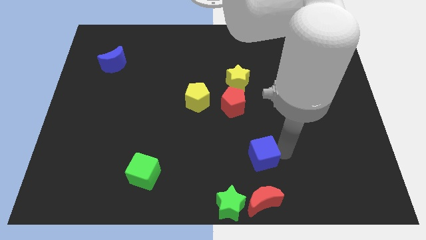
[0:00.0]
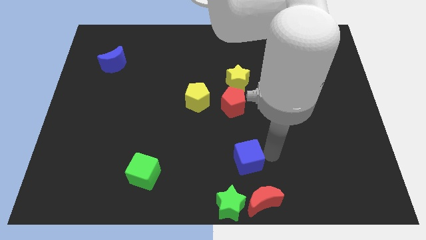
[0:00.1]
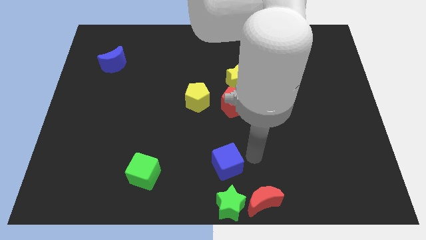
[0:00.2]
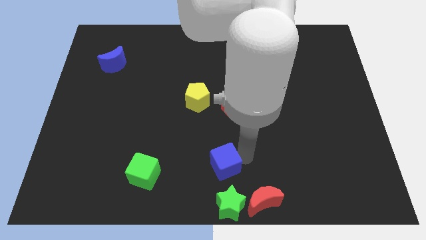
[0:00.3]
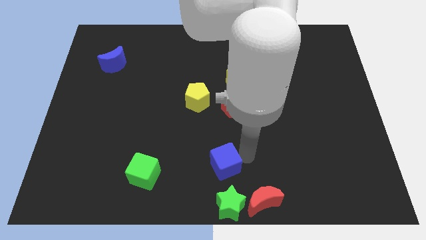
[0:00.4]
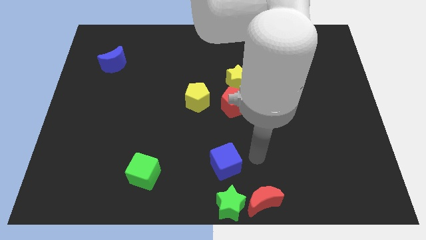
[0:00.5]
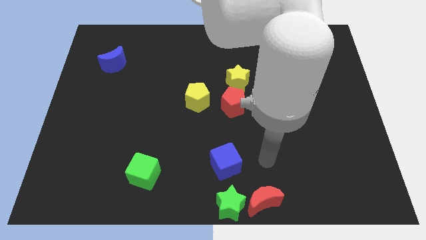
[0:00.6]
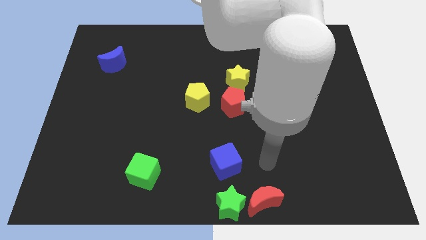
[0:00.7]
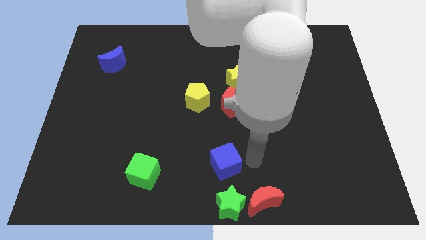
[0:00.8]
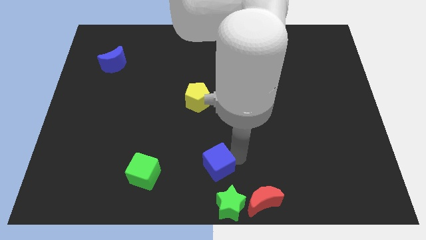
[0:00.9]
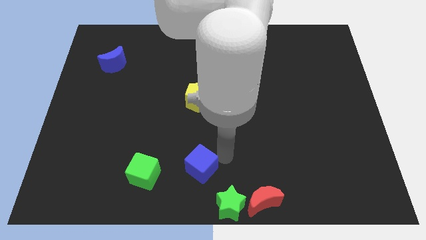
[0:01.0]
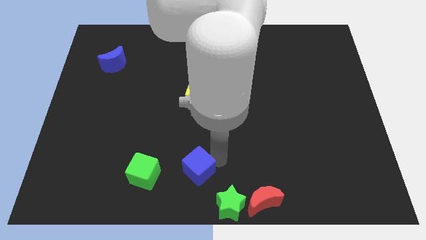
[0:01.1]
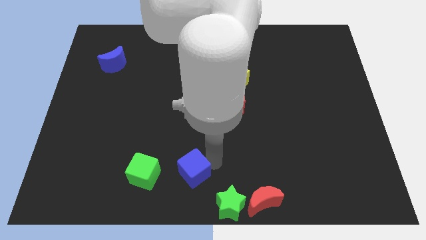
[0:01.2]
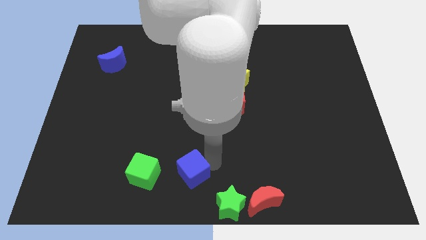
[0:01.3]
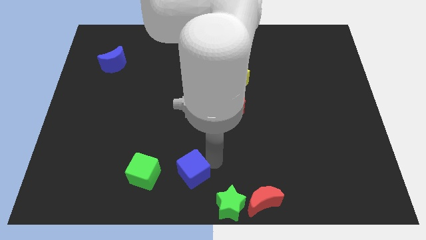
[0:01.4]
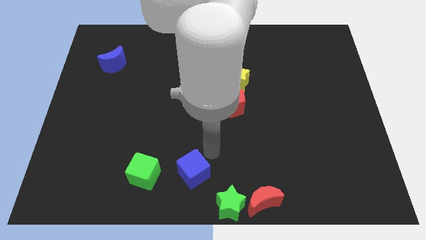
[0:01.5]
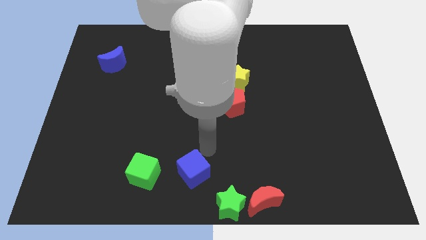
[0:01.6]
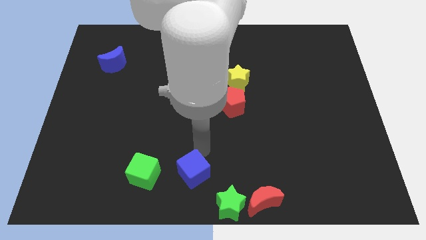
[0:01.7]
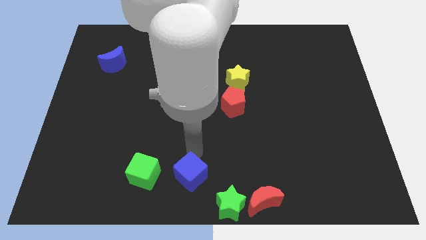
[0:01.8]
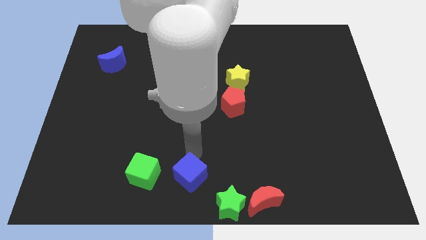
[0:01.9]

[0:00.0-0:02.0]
move the blue cube to the right side of the green cube

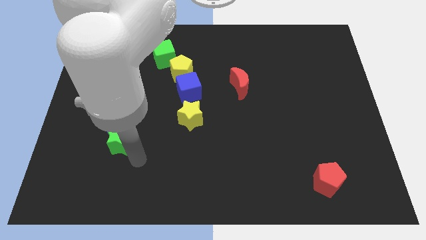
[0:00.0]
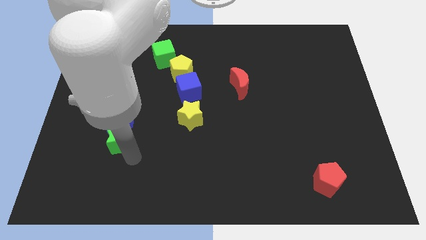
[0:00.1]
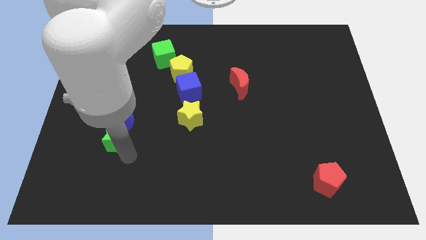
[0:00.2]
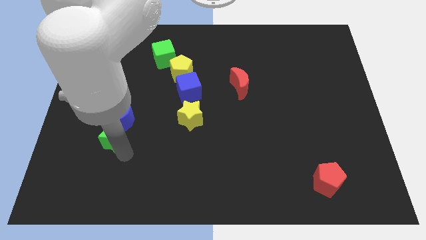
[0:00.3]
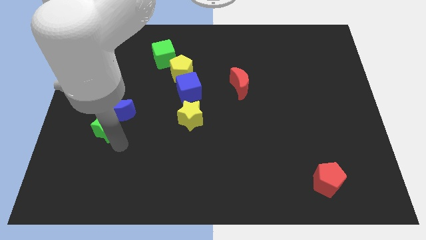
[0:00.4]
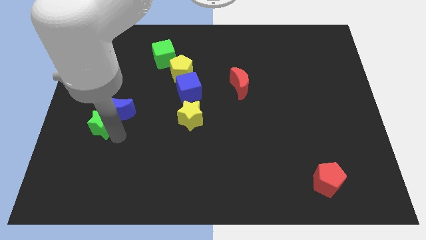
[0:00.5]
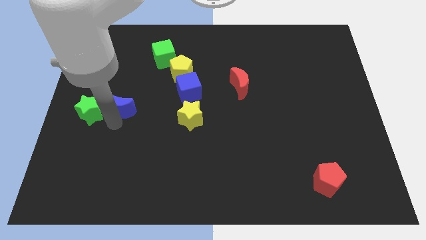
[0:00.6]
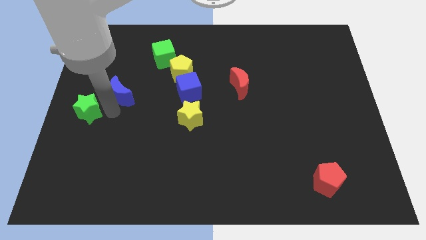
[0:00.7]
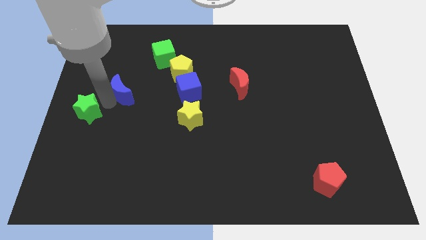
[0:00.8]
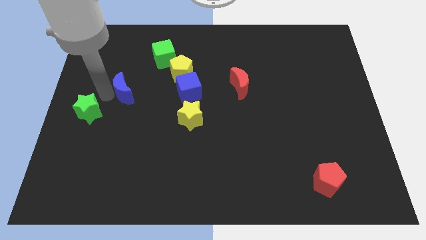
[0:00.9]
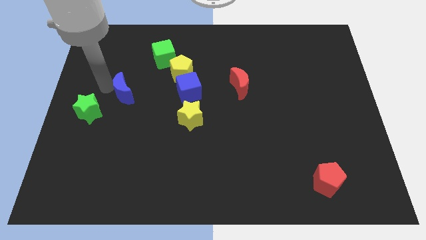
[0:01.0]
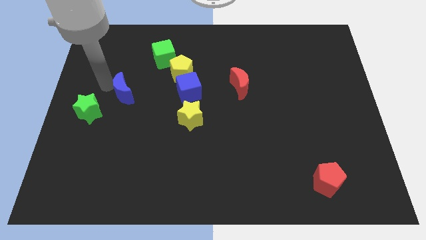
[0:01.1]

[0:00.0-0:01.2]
separate the green star from blue crescent

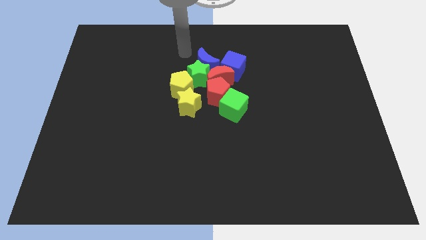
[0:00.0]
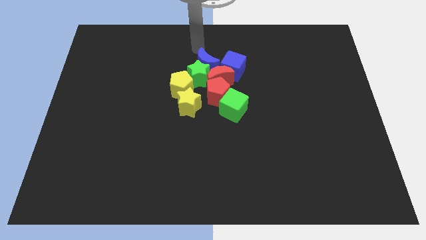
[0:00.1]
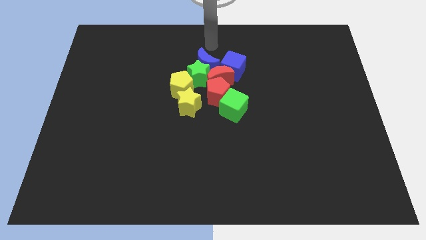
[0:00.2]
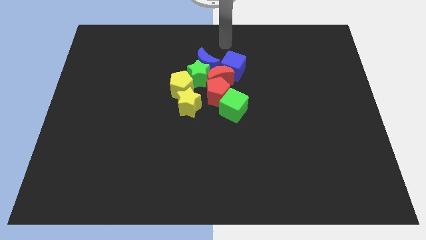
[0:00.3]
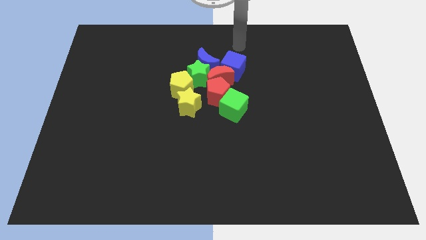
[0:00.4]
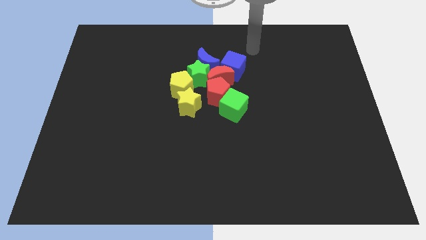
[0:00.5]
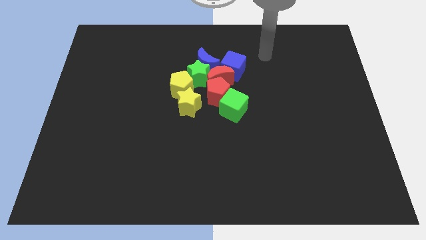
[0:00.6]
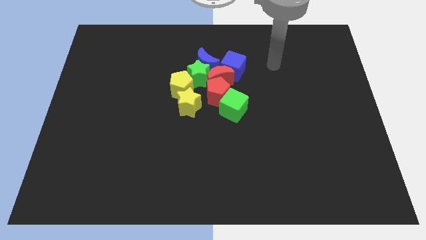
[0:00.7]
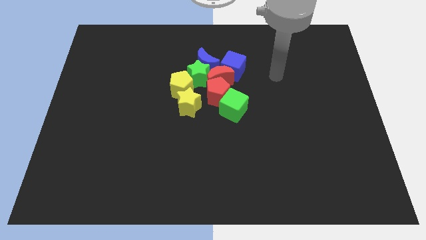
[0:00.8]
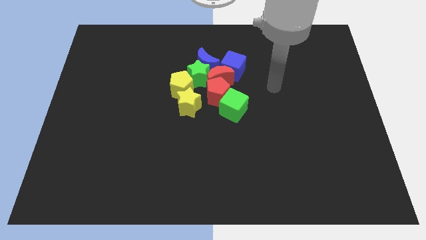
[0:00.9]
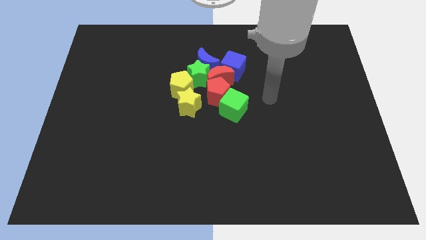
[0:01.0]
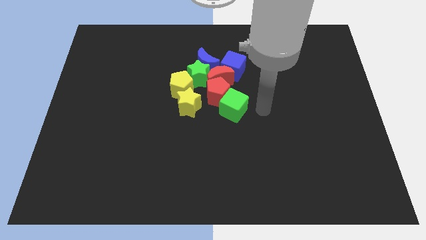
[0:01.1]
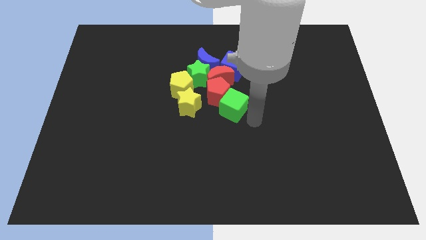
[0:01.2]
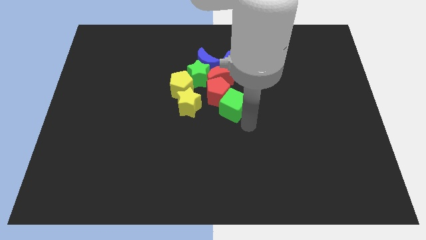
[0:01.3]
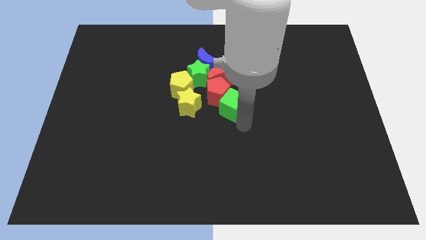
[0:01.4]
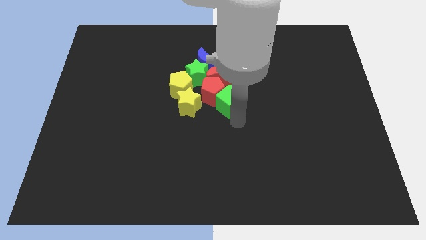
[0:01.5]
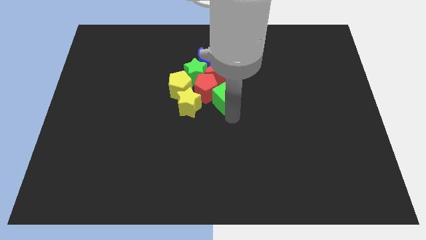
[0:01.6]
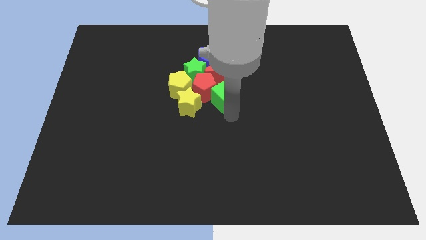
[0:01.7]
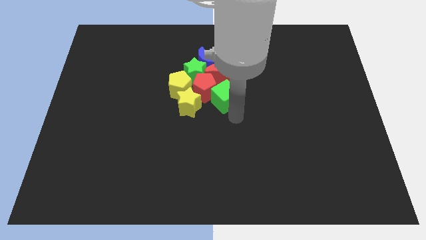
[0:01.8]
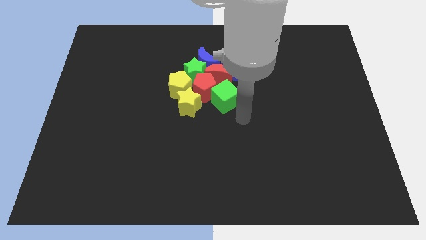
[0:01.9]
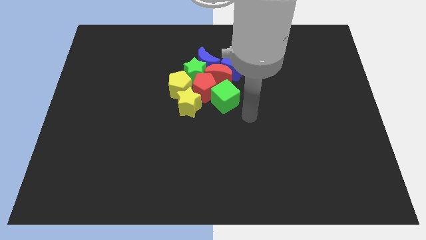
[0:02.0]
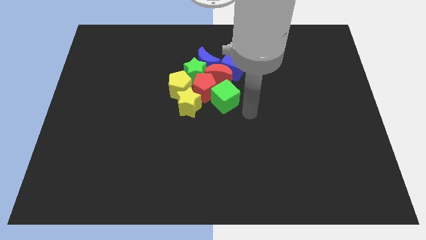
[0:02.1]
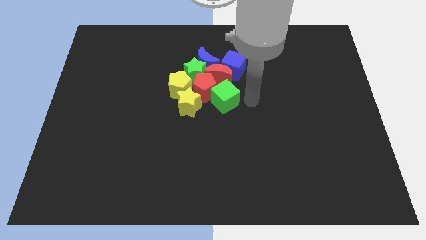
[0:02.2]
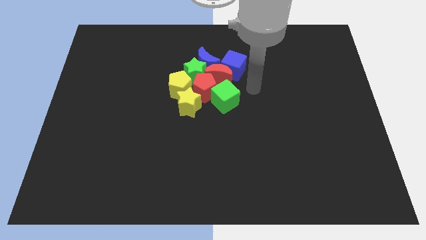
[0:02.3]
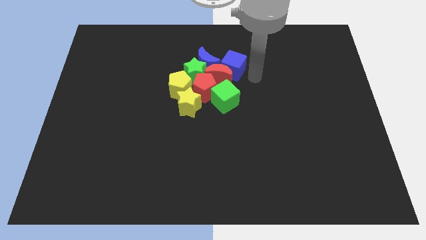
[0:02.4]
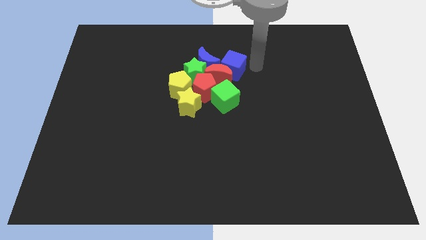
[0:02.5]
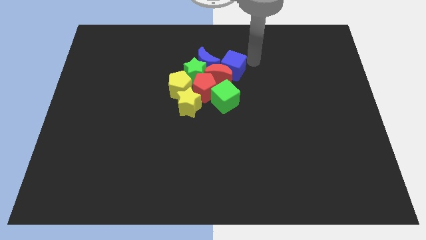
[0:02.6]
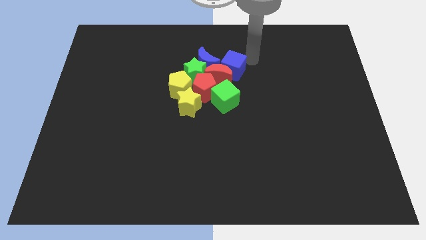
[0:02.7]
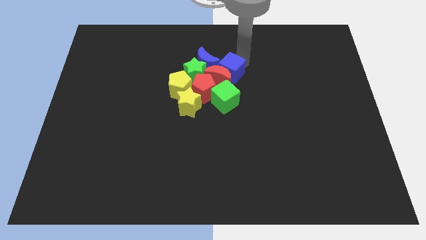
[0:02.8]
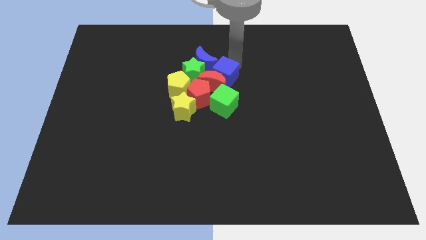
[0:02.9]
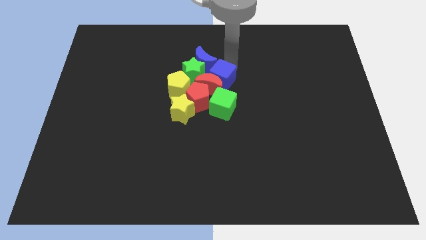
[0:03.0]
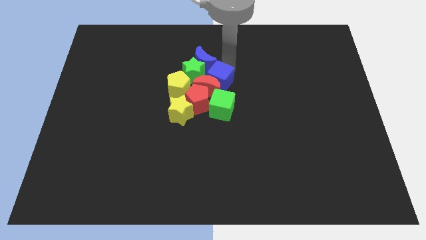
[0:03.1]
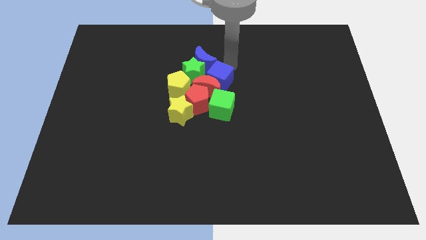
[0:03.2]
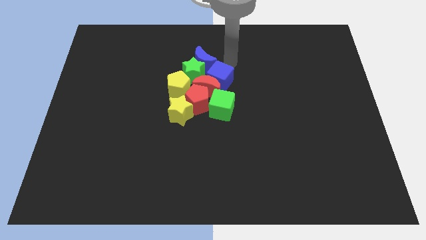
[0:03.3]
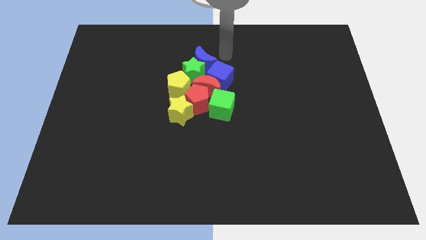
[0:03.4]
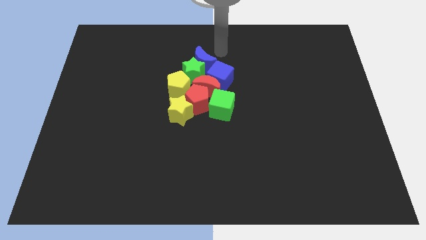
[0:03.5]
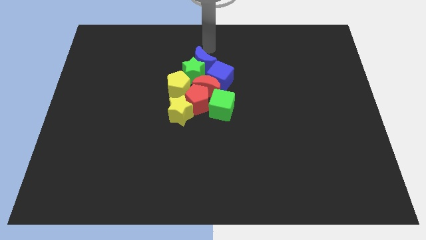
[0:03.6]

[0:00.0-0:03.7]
push the green cube into the red pentagon

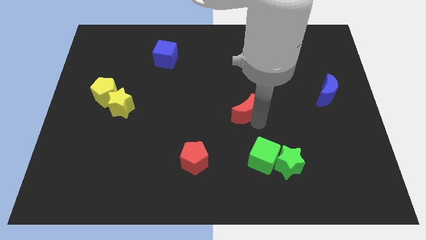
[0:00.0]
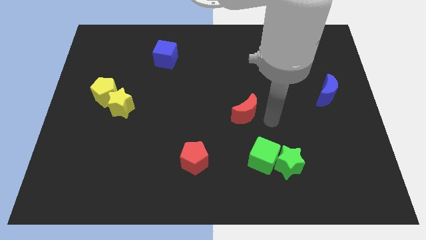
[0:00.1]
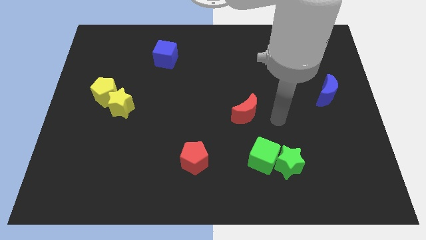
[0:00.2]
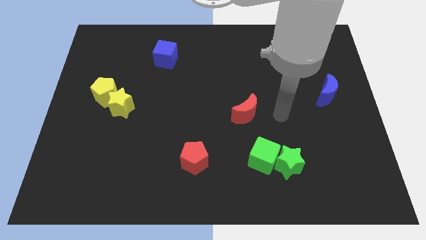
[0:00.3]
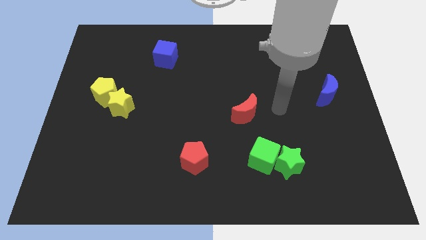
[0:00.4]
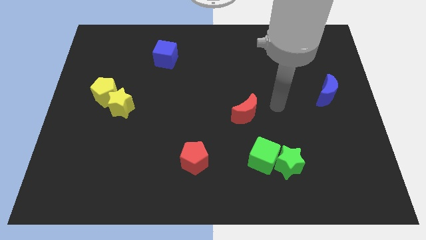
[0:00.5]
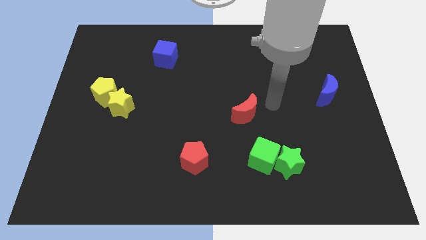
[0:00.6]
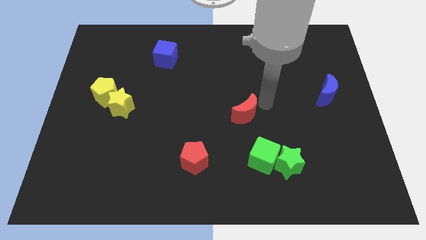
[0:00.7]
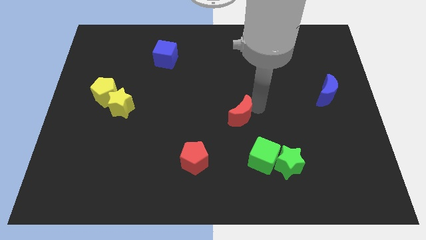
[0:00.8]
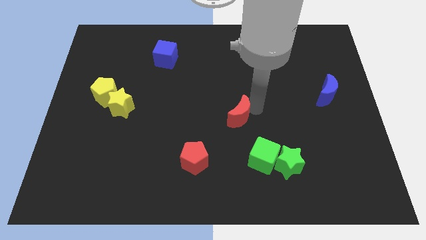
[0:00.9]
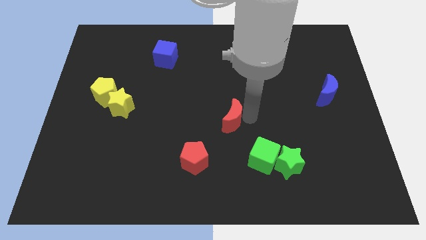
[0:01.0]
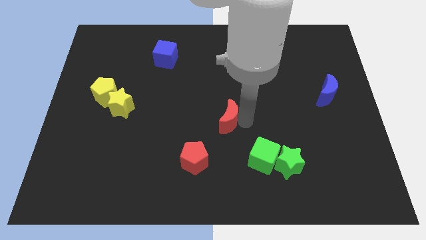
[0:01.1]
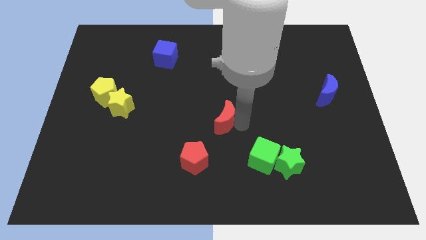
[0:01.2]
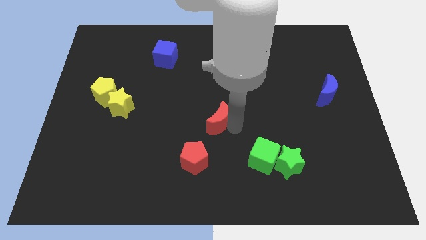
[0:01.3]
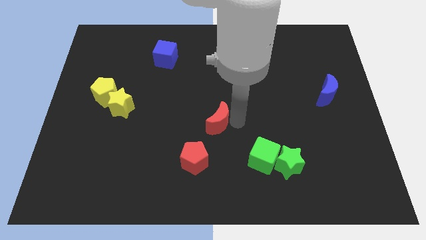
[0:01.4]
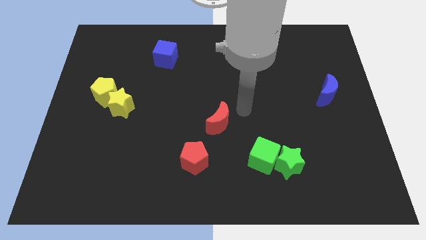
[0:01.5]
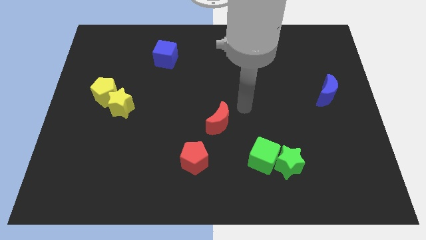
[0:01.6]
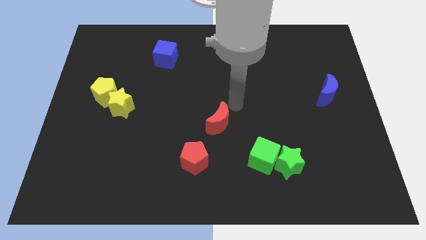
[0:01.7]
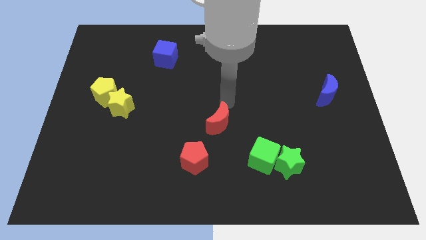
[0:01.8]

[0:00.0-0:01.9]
move the red moon slightly to the left

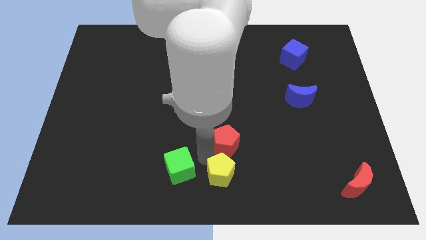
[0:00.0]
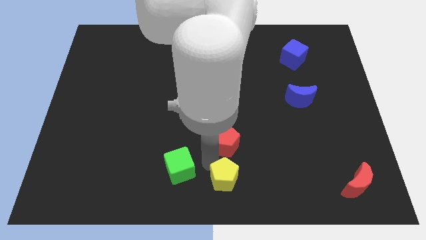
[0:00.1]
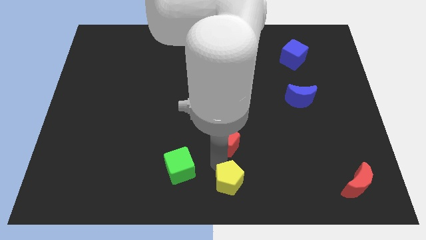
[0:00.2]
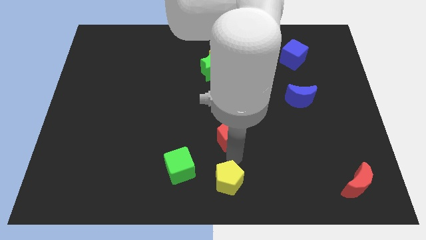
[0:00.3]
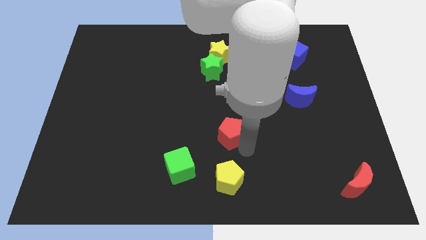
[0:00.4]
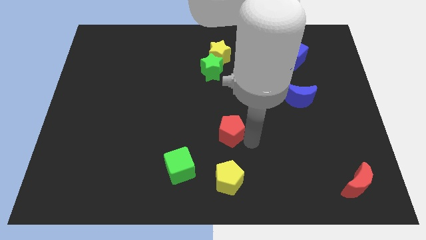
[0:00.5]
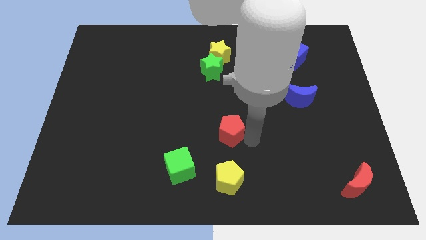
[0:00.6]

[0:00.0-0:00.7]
separate the red pentagon and yellow pentagon
